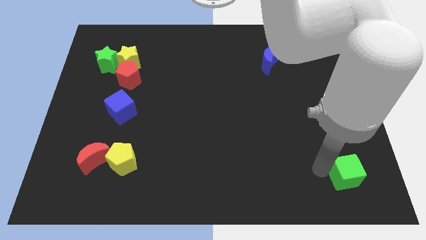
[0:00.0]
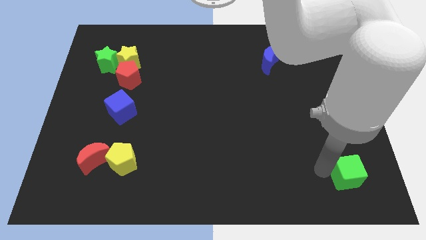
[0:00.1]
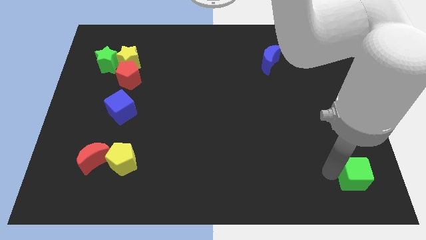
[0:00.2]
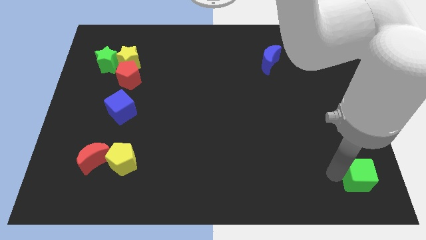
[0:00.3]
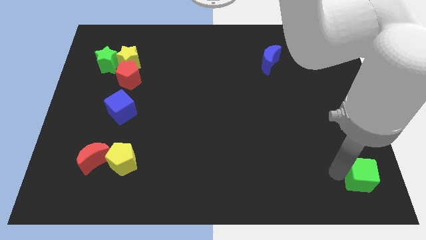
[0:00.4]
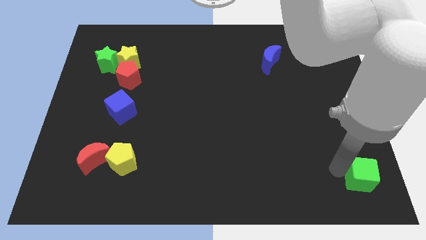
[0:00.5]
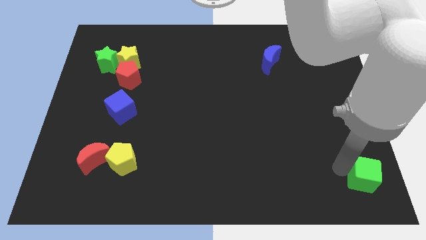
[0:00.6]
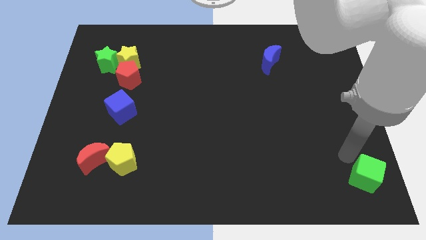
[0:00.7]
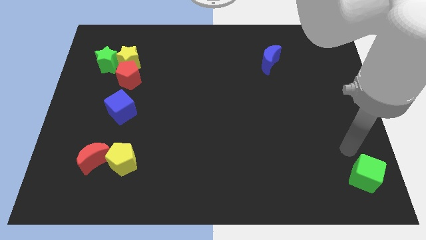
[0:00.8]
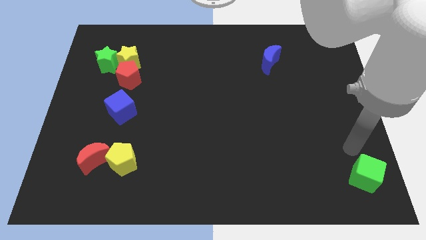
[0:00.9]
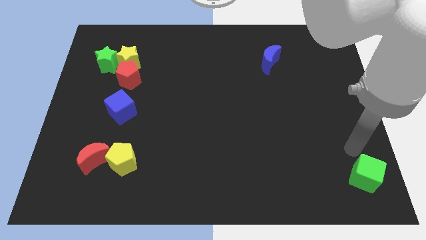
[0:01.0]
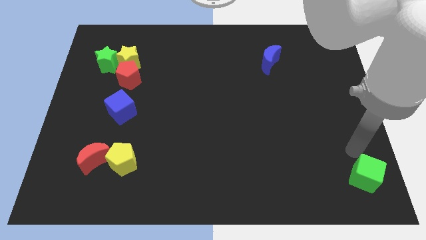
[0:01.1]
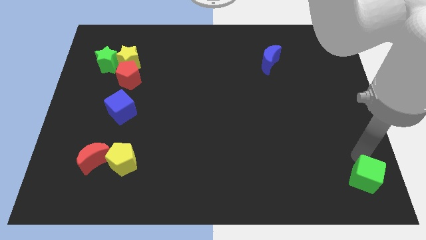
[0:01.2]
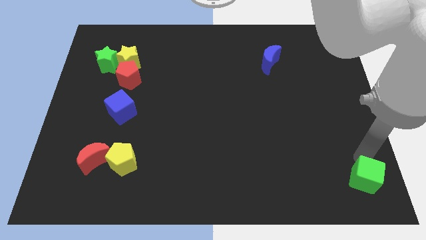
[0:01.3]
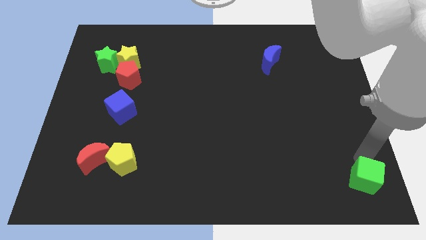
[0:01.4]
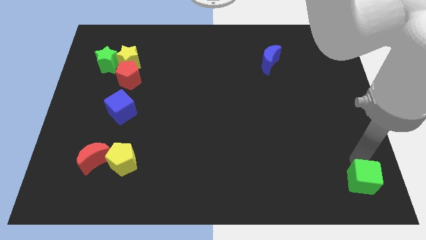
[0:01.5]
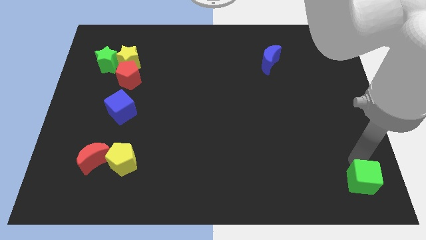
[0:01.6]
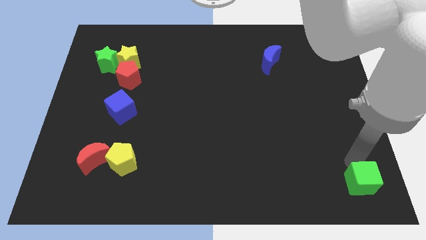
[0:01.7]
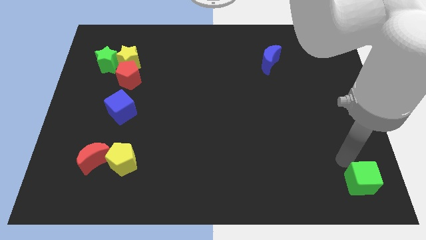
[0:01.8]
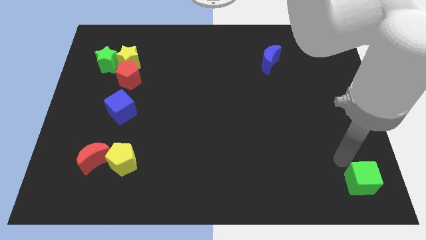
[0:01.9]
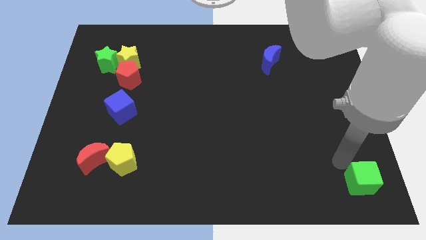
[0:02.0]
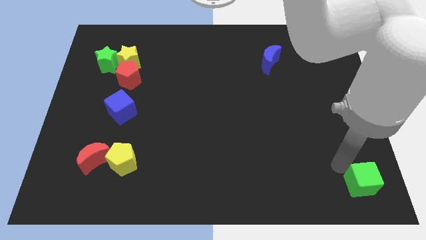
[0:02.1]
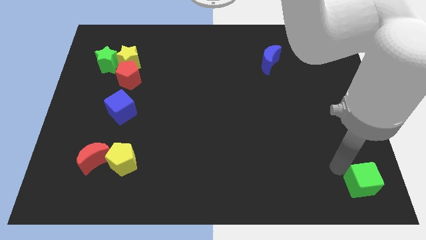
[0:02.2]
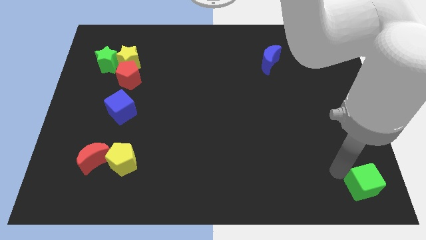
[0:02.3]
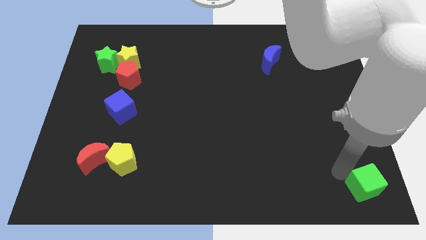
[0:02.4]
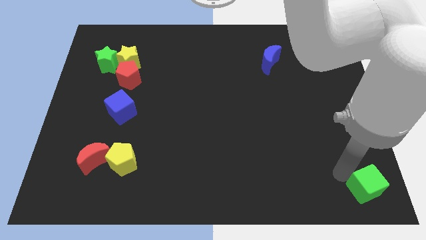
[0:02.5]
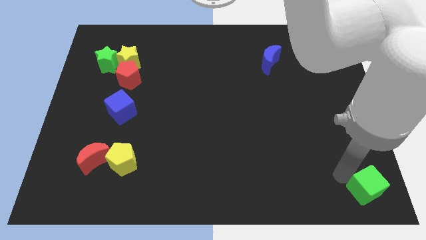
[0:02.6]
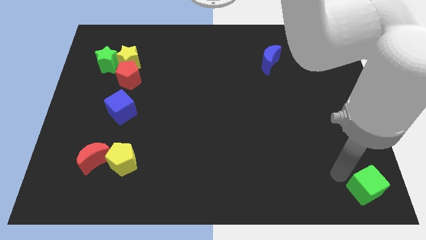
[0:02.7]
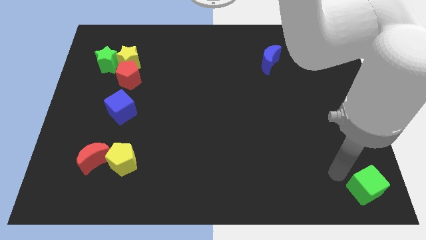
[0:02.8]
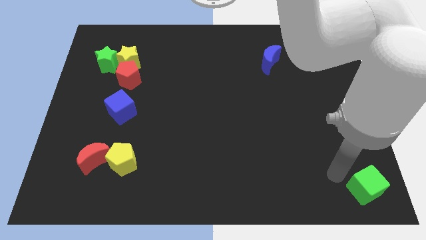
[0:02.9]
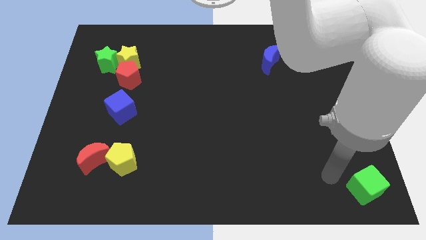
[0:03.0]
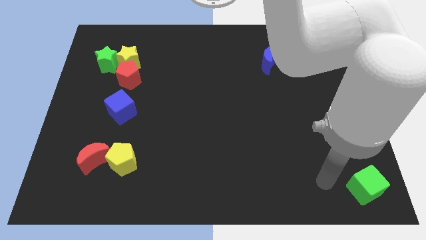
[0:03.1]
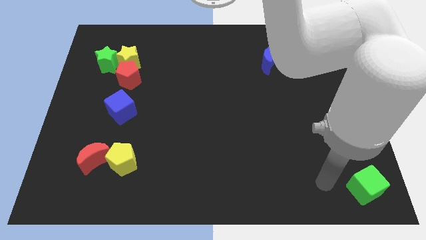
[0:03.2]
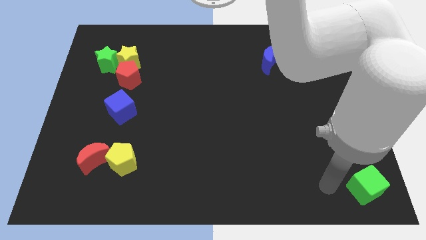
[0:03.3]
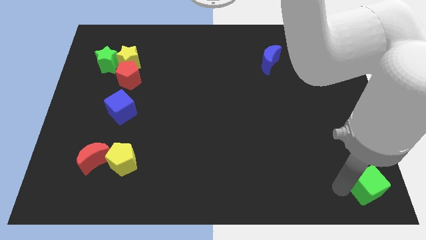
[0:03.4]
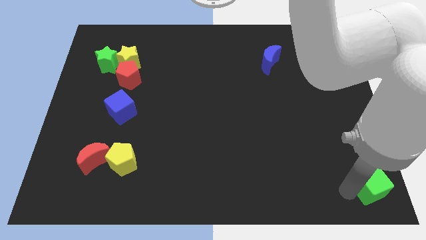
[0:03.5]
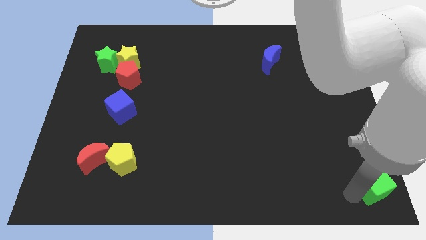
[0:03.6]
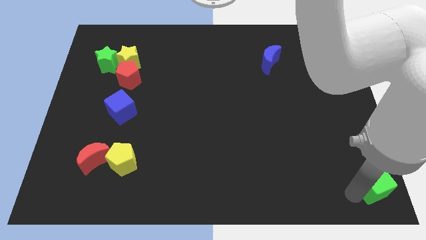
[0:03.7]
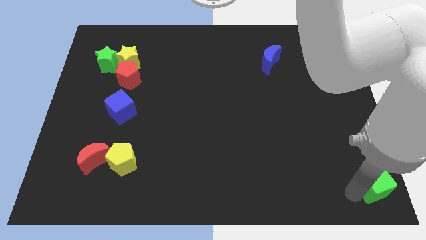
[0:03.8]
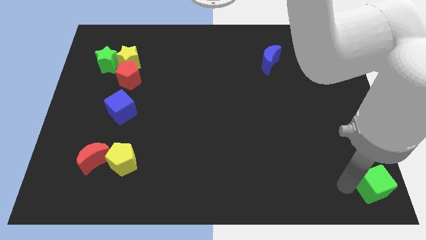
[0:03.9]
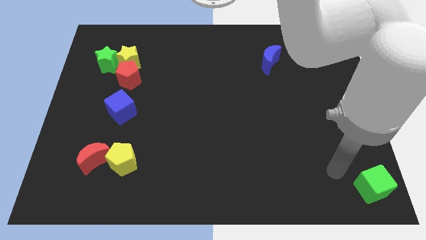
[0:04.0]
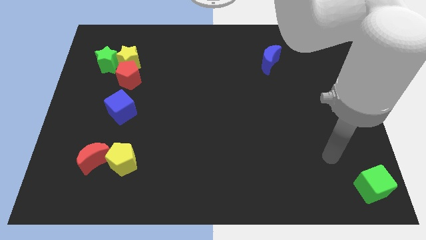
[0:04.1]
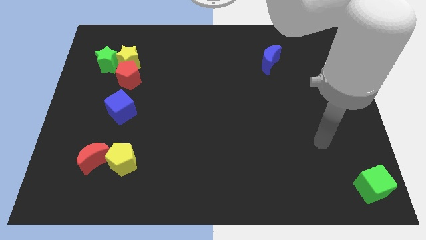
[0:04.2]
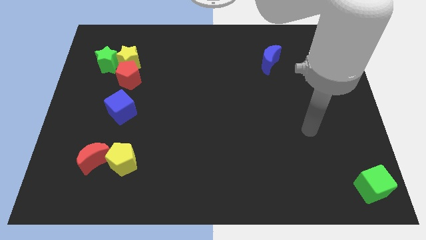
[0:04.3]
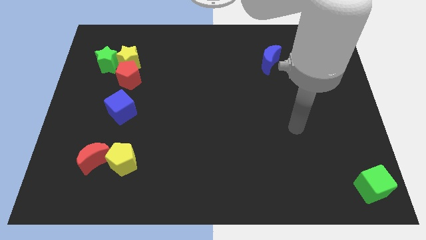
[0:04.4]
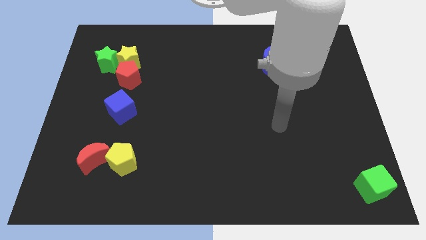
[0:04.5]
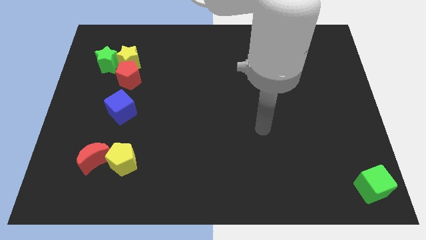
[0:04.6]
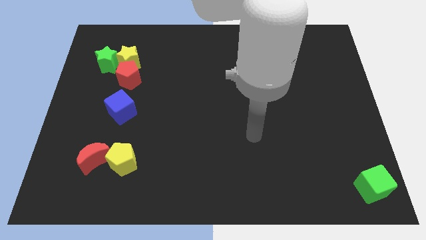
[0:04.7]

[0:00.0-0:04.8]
push the green cube to the bottom right corner of the board

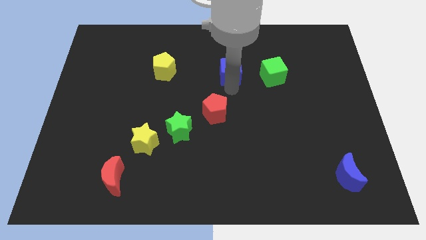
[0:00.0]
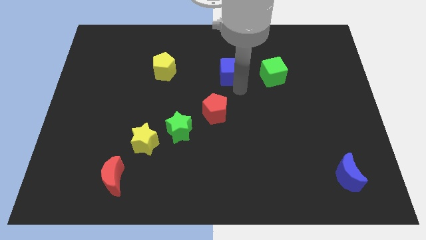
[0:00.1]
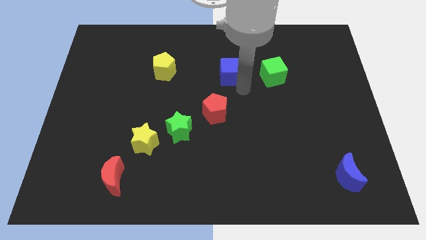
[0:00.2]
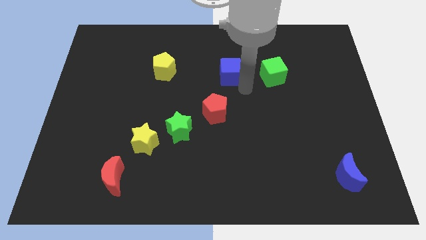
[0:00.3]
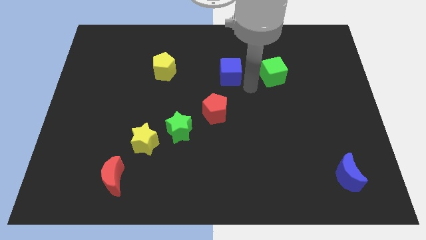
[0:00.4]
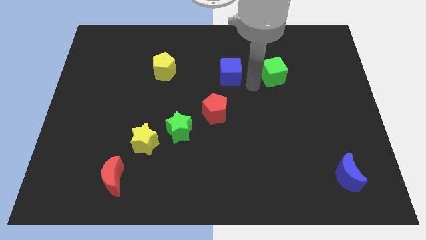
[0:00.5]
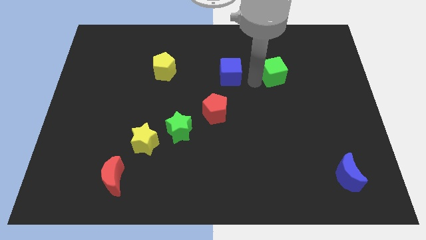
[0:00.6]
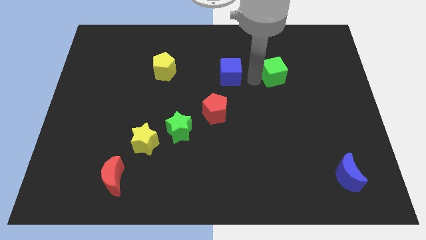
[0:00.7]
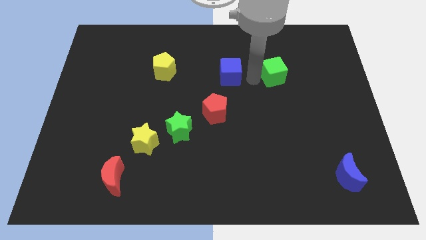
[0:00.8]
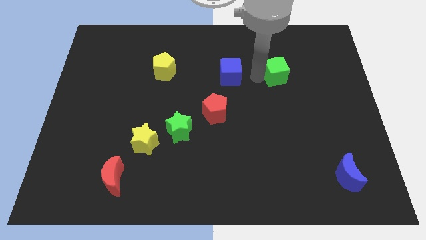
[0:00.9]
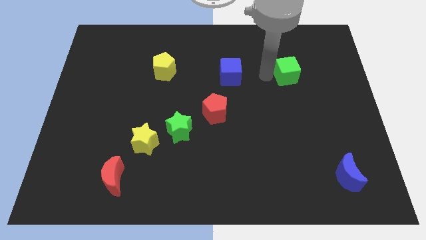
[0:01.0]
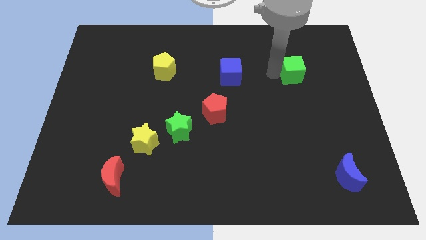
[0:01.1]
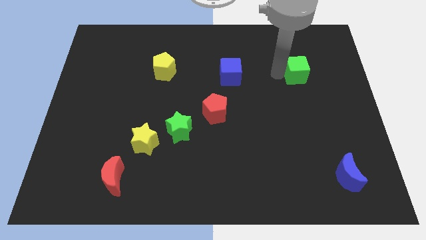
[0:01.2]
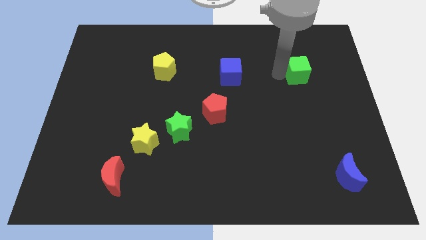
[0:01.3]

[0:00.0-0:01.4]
push the green cube slightly right side

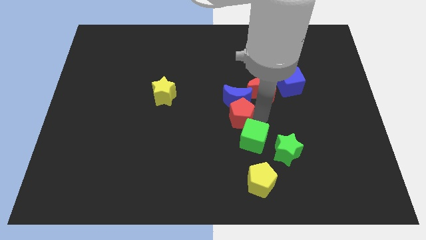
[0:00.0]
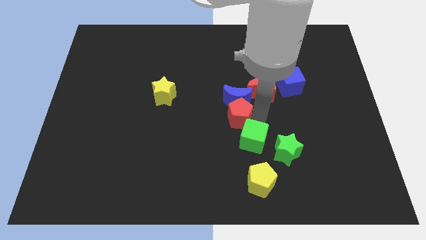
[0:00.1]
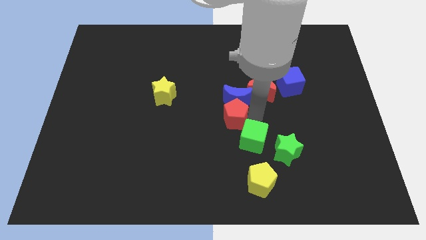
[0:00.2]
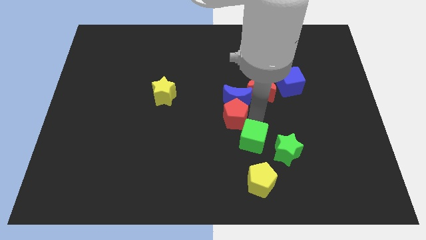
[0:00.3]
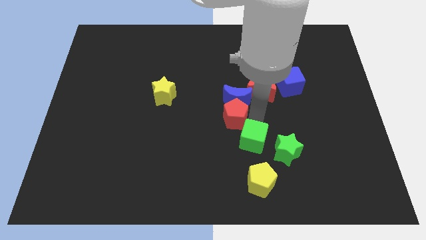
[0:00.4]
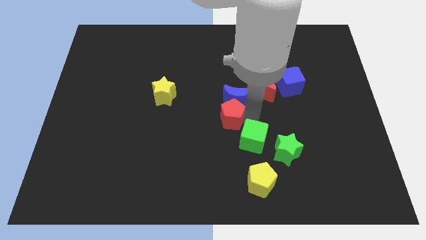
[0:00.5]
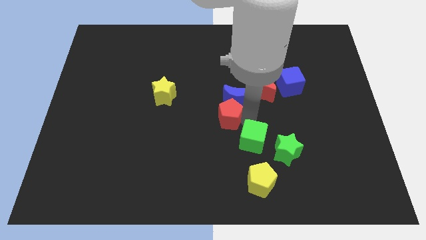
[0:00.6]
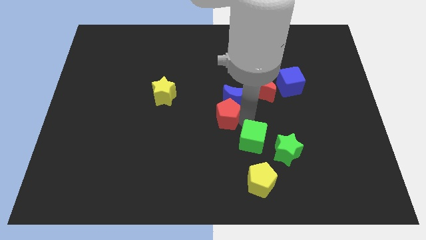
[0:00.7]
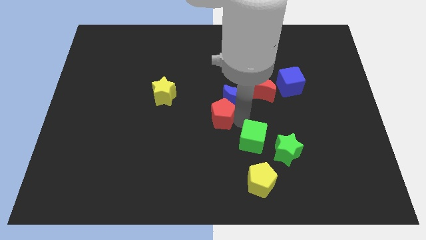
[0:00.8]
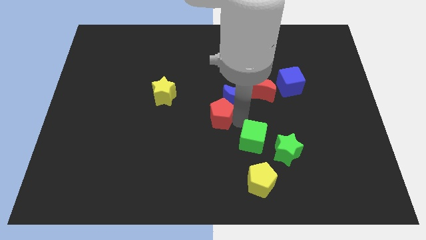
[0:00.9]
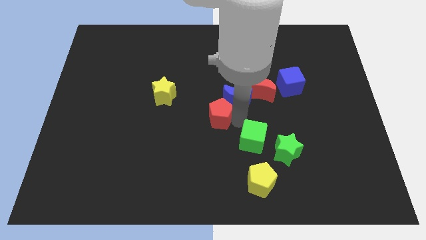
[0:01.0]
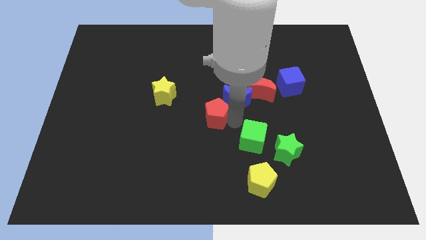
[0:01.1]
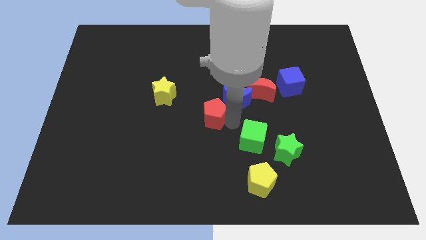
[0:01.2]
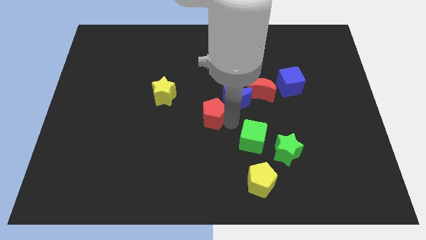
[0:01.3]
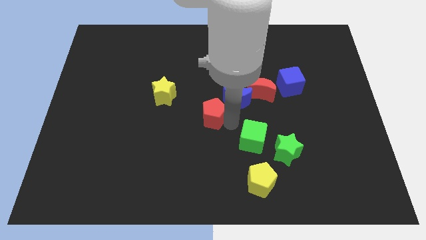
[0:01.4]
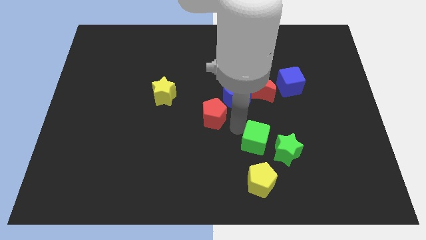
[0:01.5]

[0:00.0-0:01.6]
put the red pentagon at the bottom side of the blue crescent

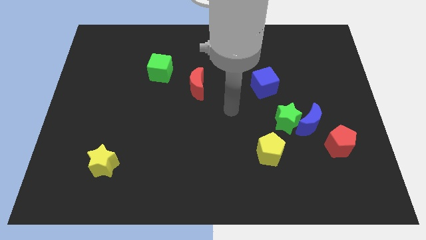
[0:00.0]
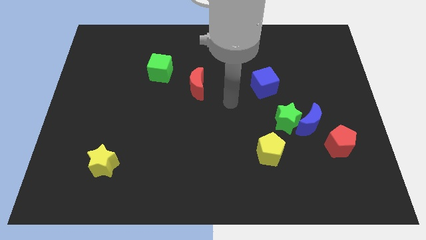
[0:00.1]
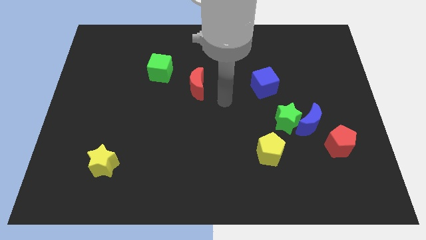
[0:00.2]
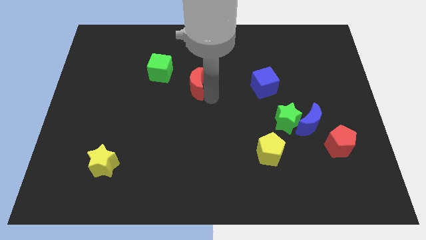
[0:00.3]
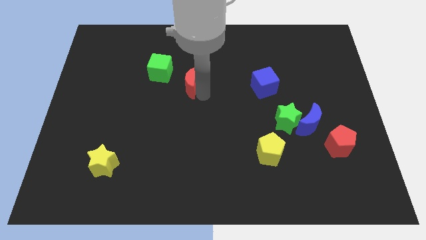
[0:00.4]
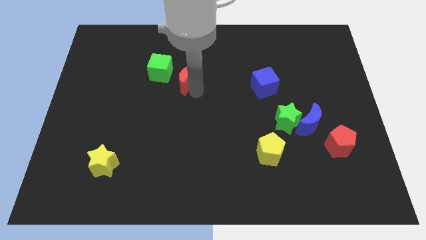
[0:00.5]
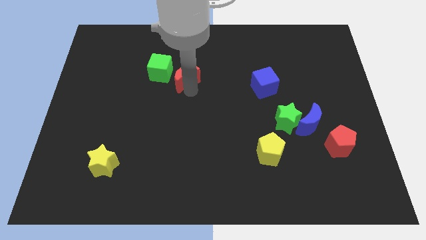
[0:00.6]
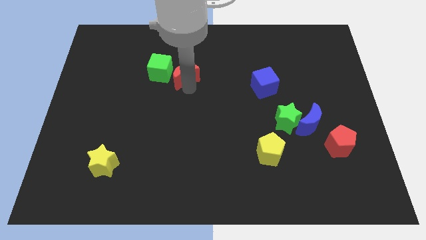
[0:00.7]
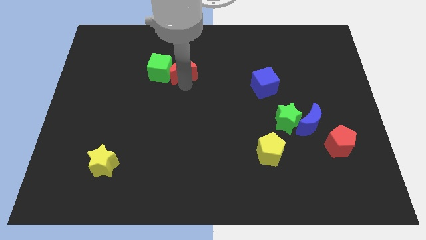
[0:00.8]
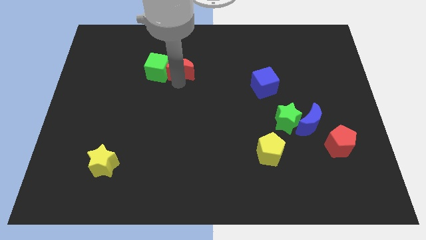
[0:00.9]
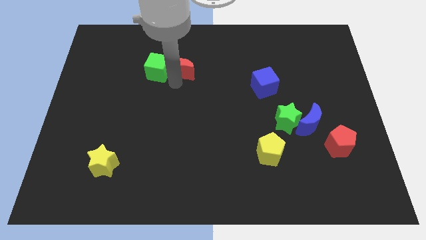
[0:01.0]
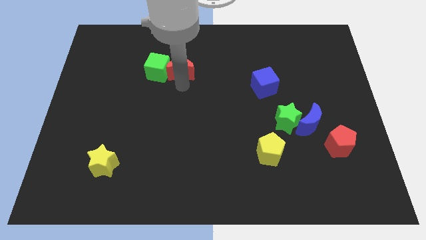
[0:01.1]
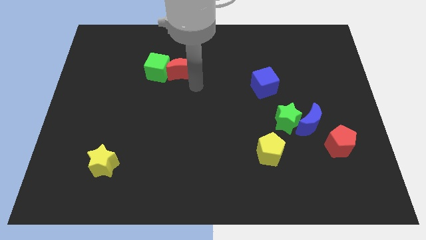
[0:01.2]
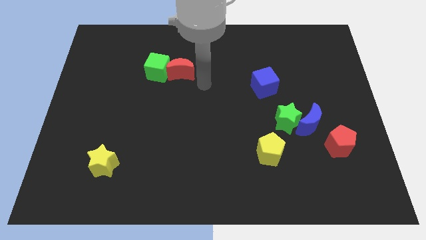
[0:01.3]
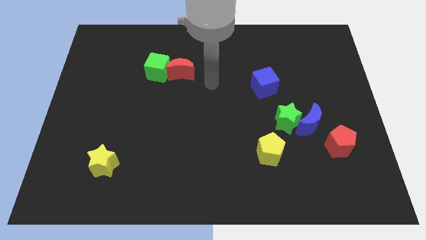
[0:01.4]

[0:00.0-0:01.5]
push the red crescent in the green cube
